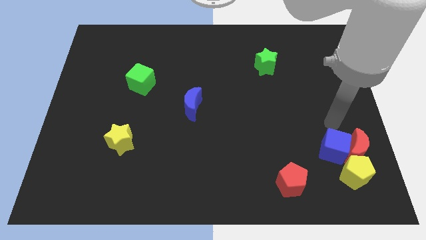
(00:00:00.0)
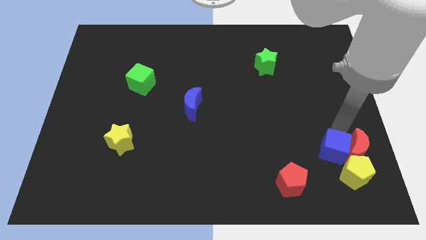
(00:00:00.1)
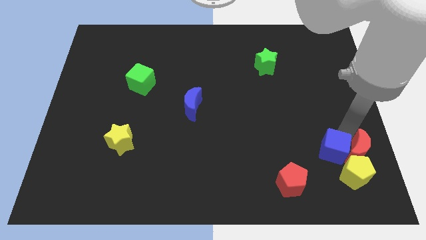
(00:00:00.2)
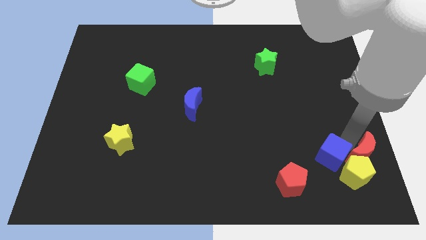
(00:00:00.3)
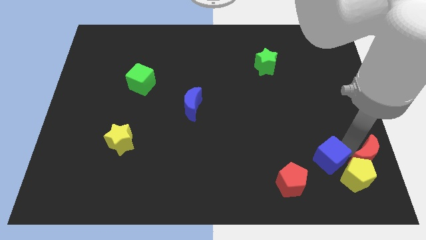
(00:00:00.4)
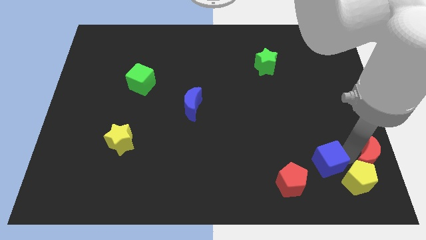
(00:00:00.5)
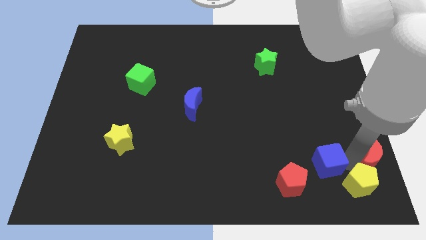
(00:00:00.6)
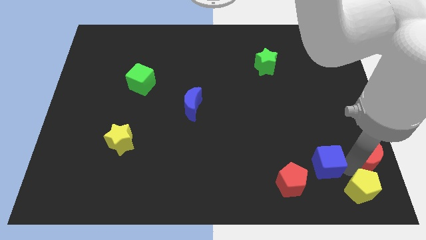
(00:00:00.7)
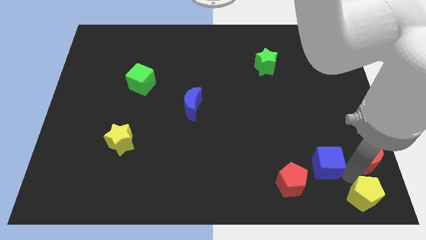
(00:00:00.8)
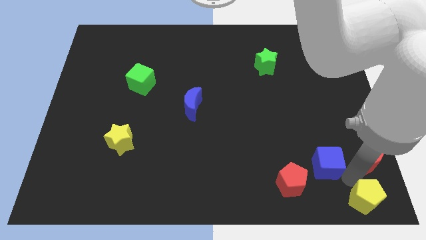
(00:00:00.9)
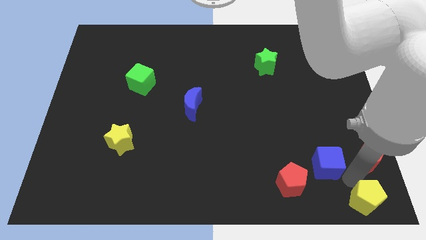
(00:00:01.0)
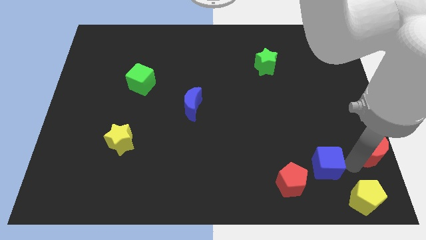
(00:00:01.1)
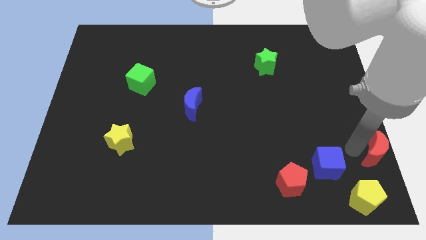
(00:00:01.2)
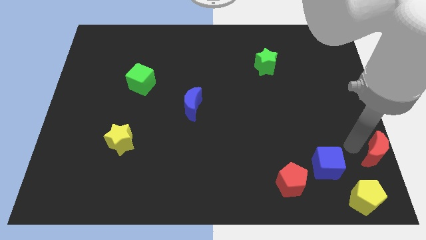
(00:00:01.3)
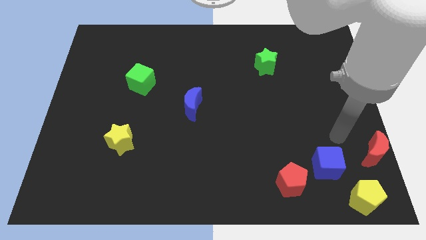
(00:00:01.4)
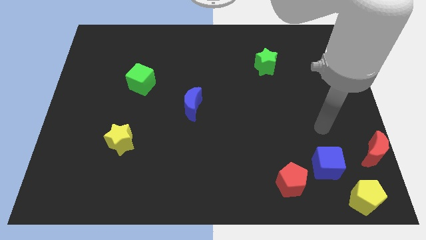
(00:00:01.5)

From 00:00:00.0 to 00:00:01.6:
separate the blocks from one another

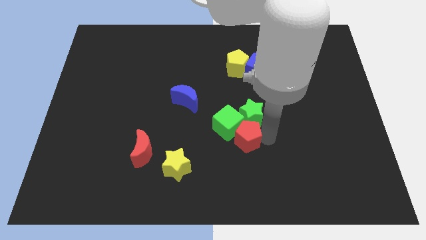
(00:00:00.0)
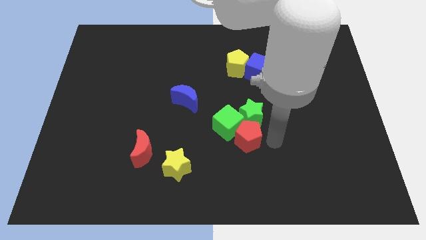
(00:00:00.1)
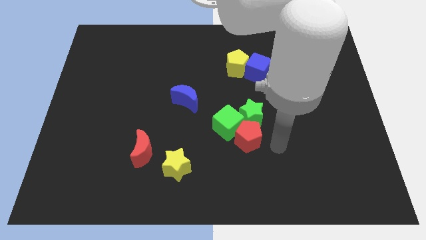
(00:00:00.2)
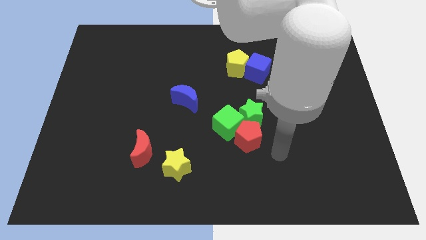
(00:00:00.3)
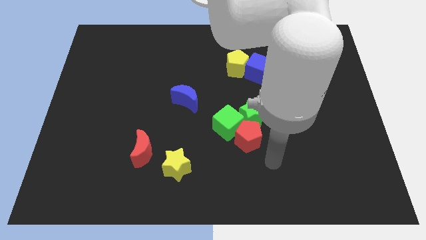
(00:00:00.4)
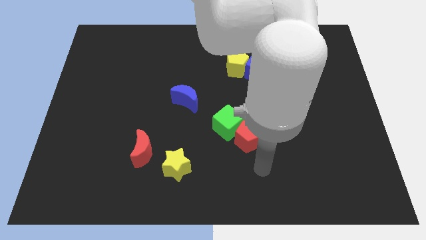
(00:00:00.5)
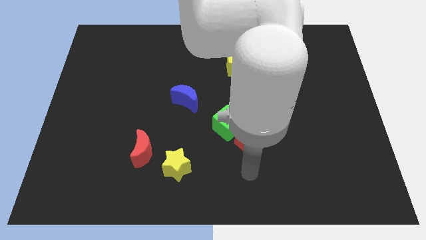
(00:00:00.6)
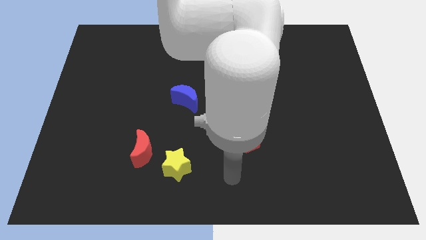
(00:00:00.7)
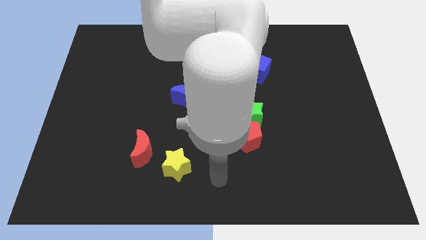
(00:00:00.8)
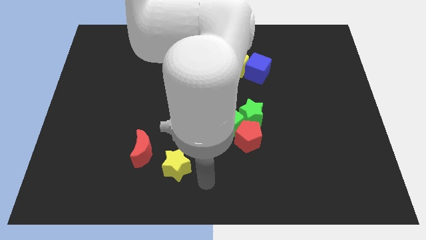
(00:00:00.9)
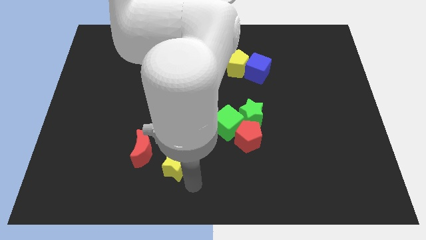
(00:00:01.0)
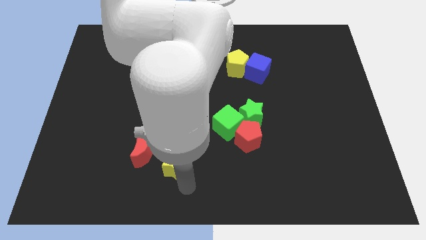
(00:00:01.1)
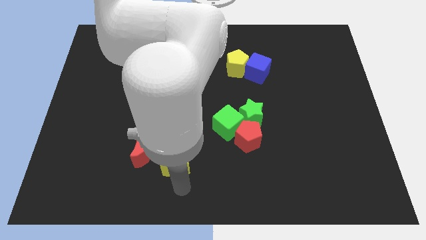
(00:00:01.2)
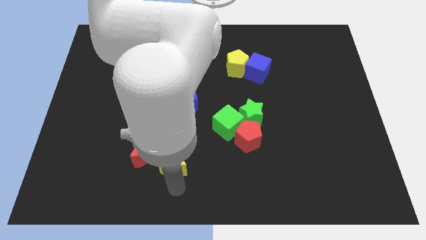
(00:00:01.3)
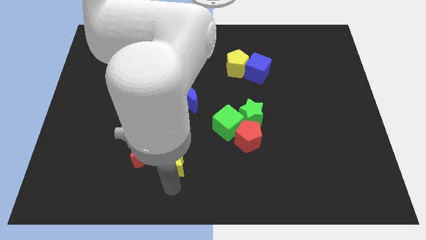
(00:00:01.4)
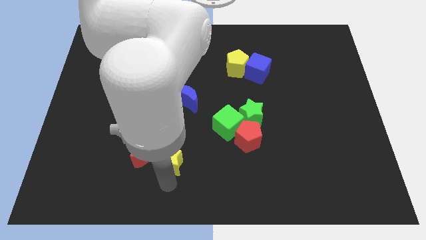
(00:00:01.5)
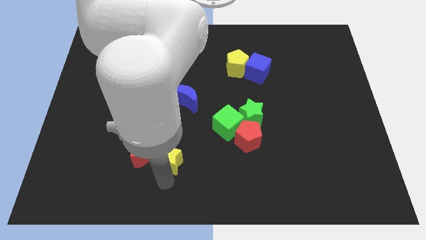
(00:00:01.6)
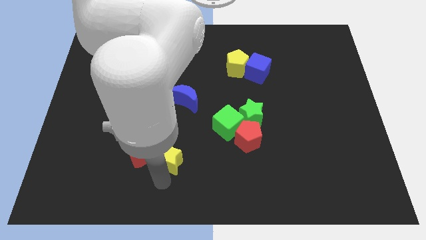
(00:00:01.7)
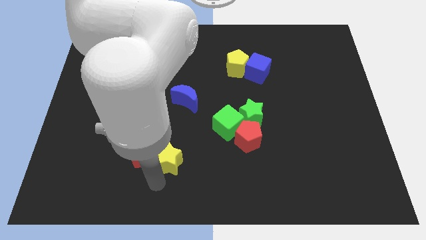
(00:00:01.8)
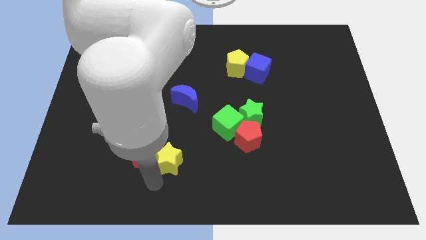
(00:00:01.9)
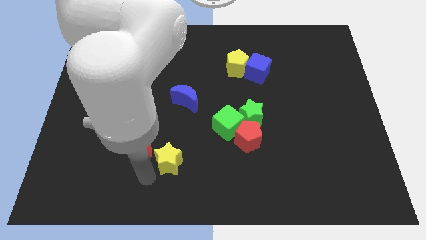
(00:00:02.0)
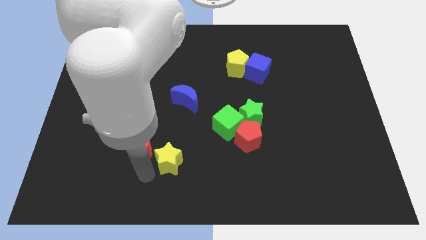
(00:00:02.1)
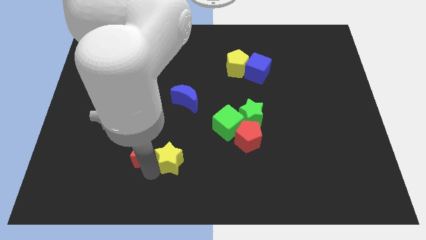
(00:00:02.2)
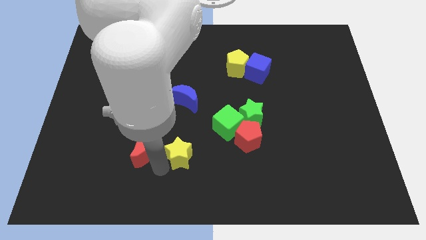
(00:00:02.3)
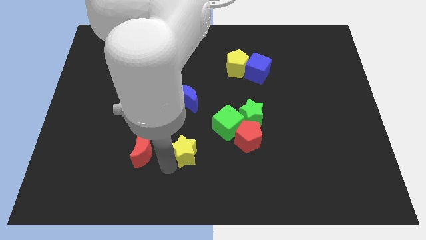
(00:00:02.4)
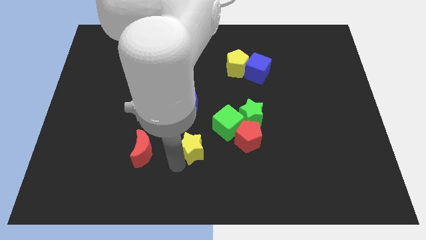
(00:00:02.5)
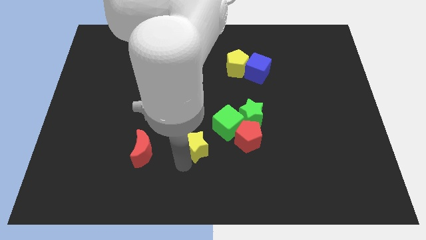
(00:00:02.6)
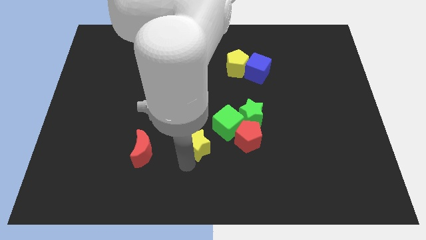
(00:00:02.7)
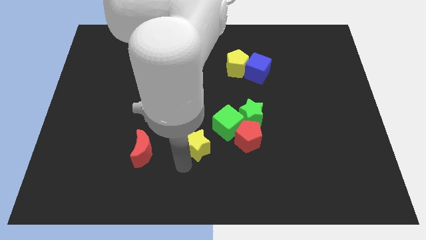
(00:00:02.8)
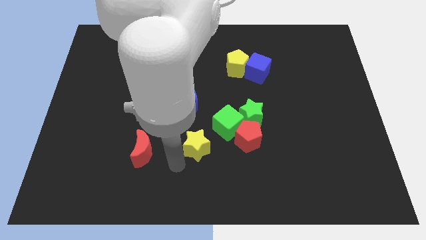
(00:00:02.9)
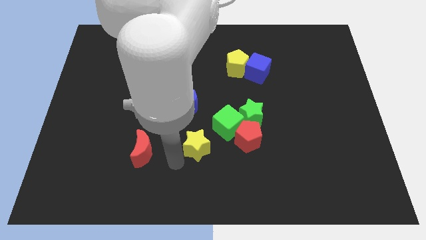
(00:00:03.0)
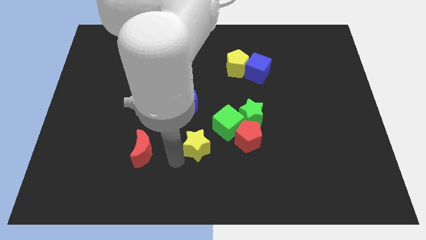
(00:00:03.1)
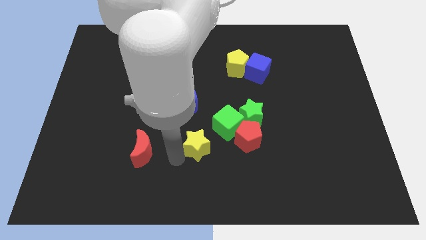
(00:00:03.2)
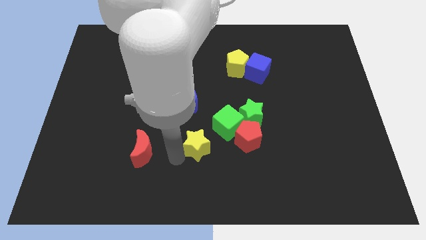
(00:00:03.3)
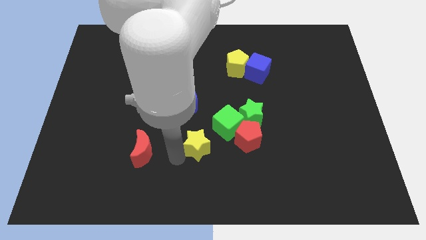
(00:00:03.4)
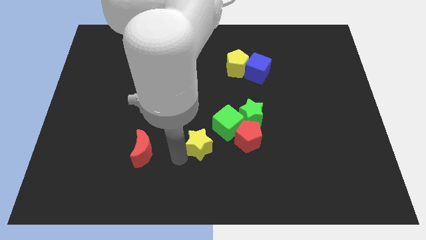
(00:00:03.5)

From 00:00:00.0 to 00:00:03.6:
move the yellow star towards the green cube

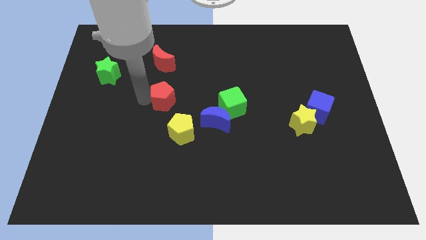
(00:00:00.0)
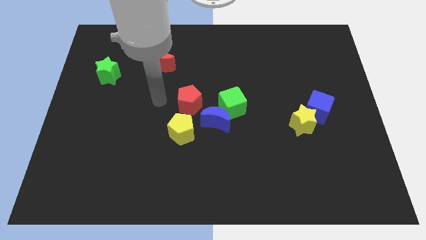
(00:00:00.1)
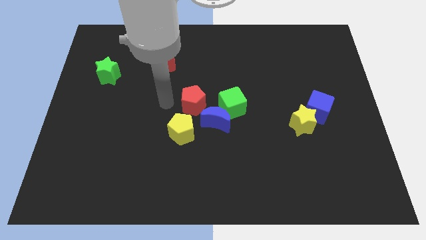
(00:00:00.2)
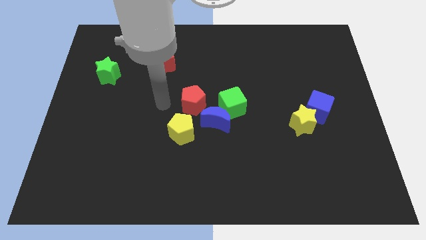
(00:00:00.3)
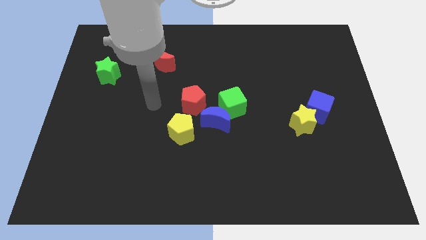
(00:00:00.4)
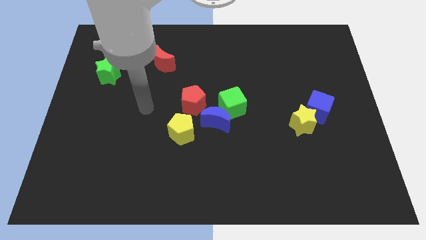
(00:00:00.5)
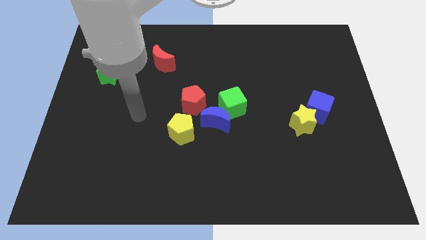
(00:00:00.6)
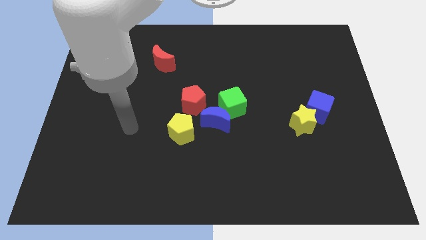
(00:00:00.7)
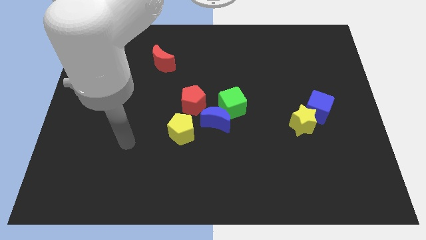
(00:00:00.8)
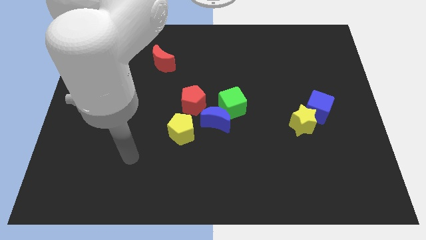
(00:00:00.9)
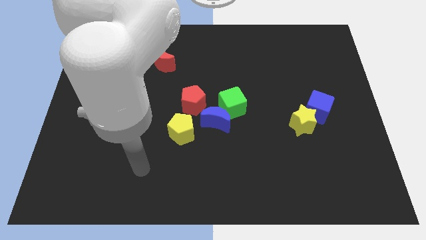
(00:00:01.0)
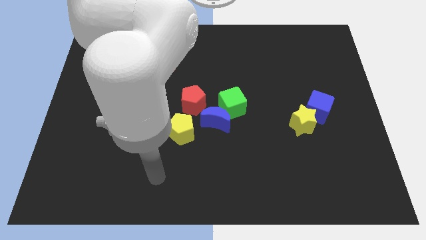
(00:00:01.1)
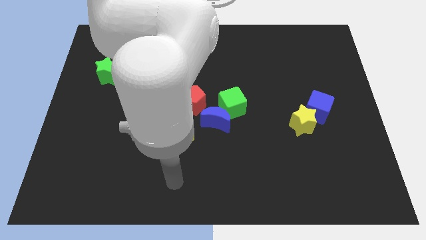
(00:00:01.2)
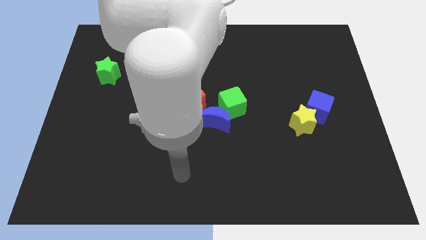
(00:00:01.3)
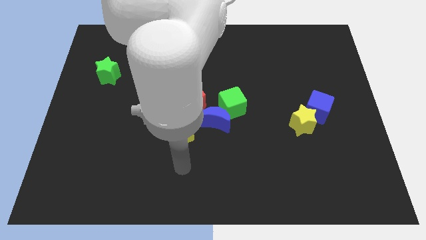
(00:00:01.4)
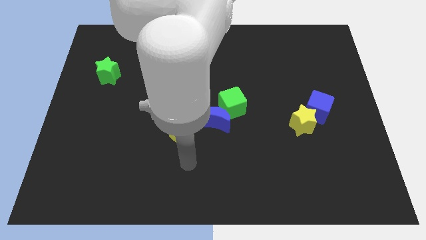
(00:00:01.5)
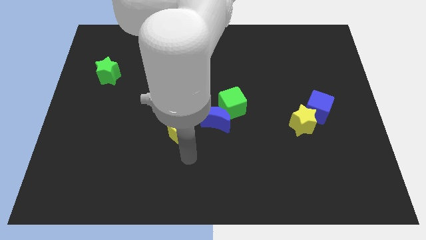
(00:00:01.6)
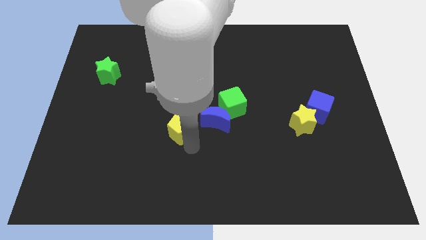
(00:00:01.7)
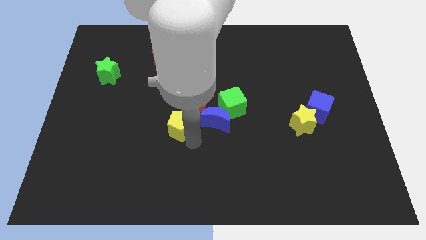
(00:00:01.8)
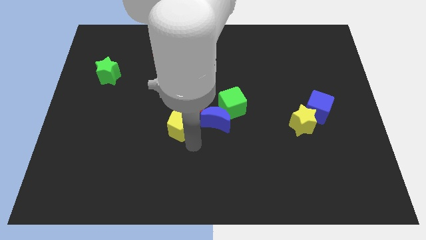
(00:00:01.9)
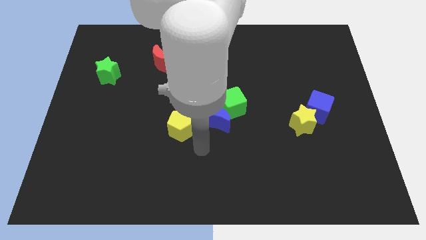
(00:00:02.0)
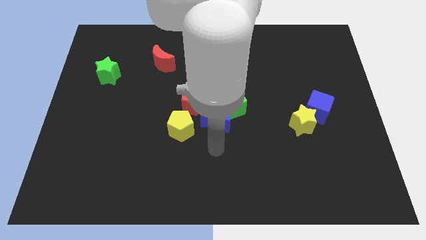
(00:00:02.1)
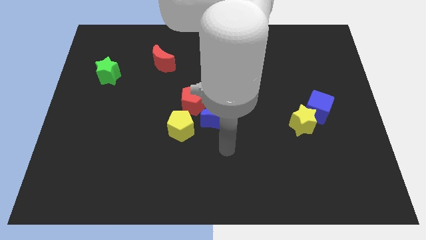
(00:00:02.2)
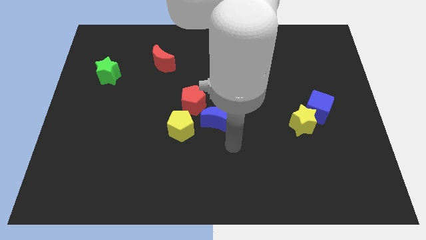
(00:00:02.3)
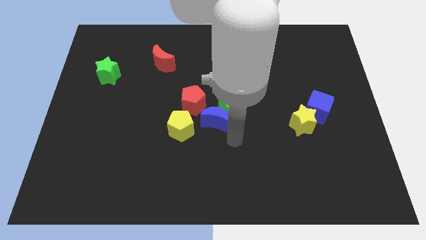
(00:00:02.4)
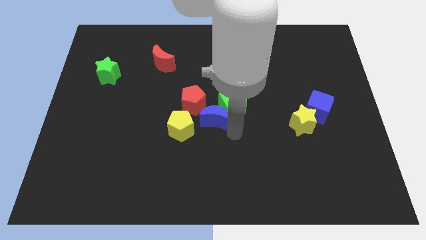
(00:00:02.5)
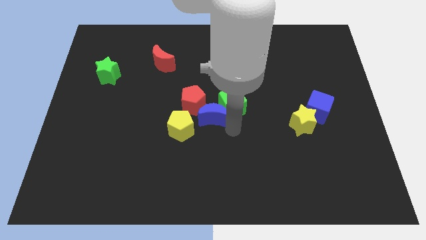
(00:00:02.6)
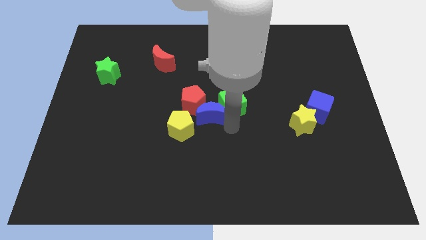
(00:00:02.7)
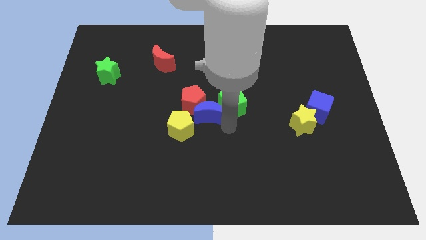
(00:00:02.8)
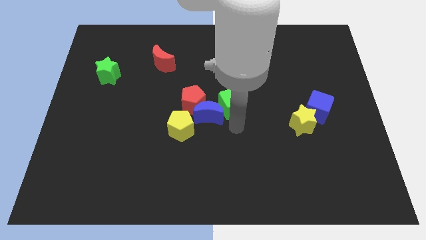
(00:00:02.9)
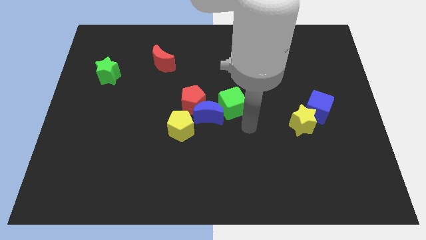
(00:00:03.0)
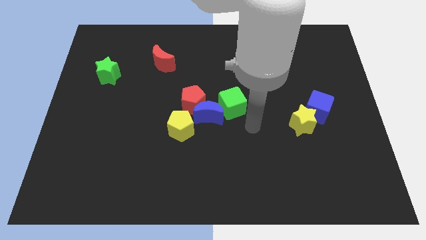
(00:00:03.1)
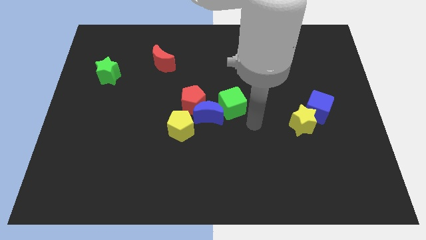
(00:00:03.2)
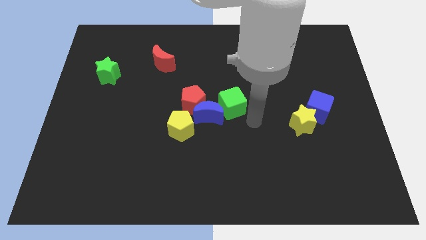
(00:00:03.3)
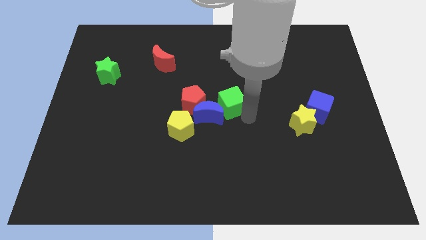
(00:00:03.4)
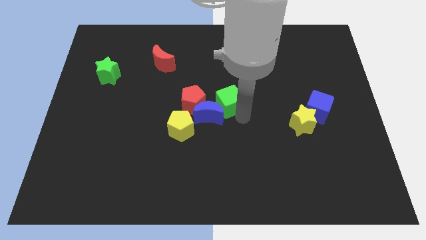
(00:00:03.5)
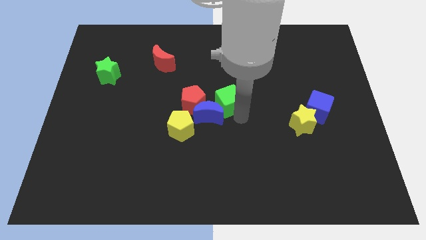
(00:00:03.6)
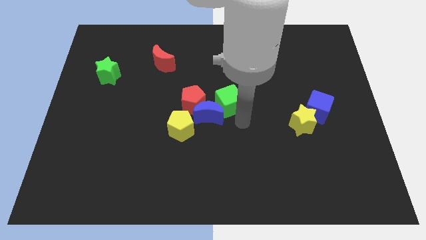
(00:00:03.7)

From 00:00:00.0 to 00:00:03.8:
place the red pentagongreen cube and yellow pentagonblue crescent to the center of the board
